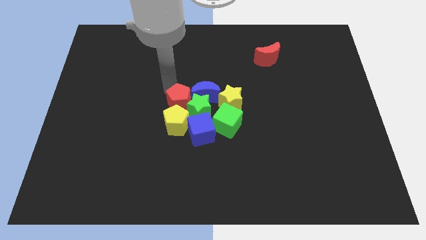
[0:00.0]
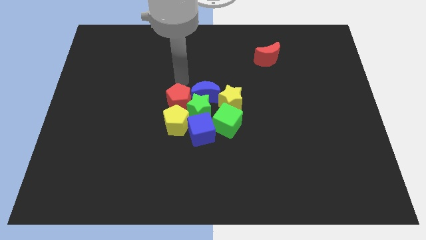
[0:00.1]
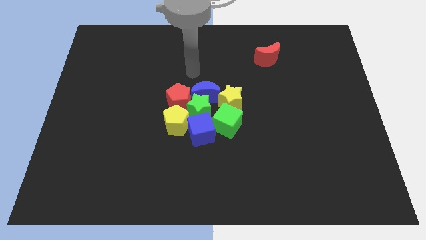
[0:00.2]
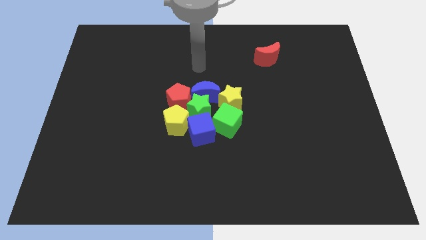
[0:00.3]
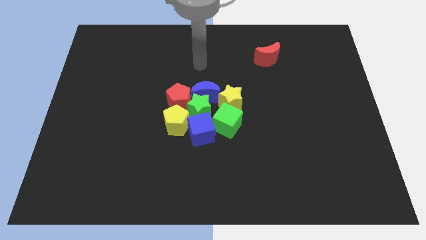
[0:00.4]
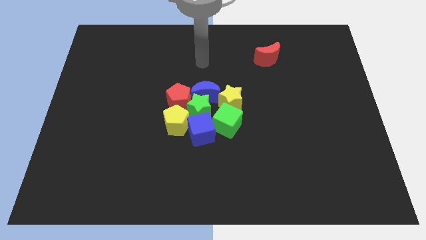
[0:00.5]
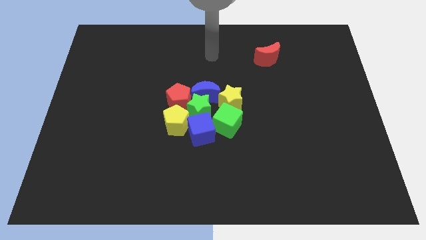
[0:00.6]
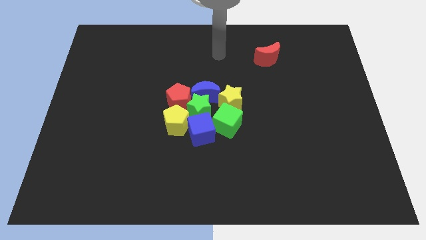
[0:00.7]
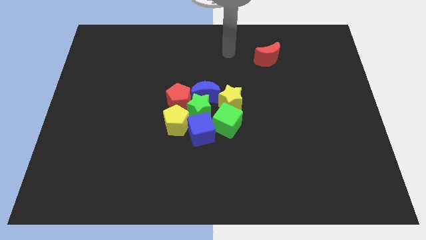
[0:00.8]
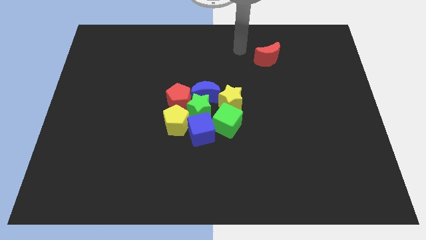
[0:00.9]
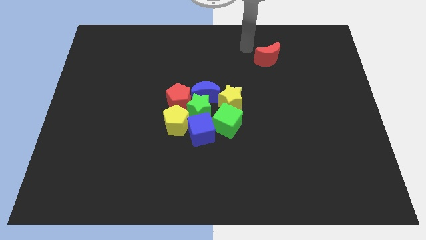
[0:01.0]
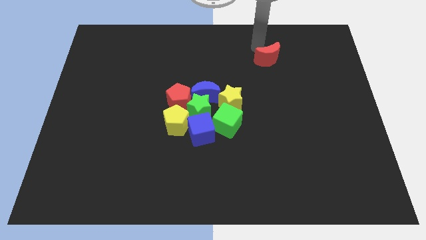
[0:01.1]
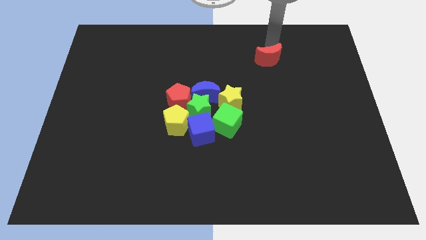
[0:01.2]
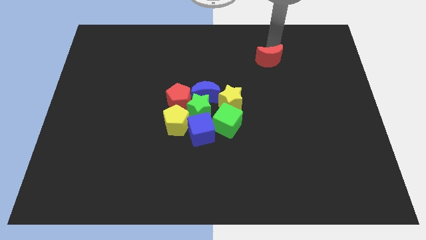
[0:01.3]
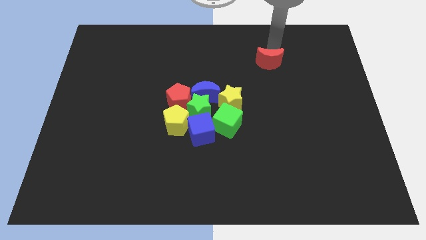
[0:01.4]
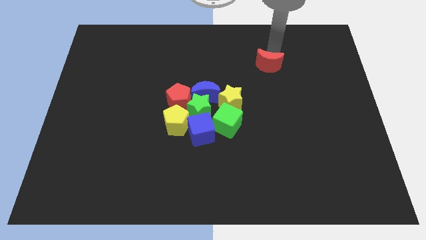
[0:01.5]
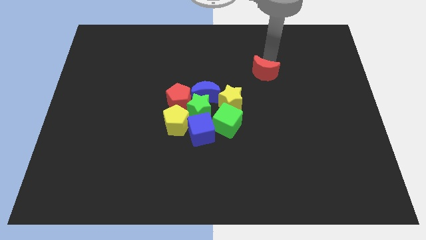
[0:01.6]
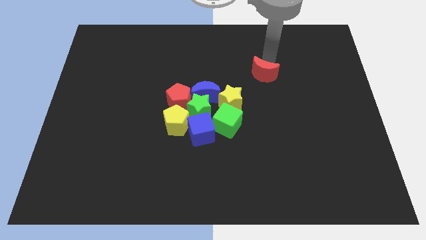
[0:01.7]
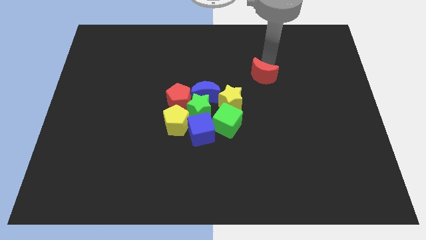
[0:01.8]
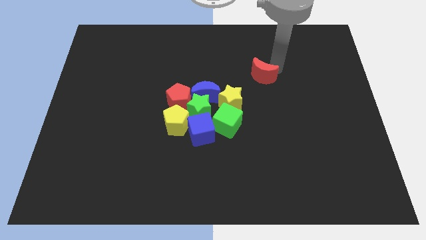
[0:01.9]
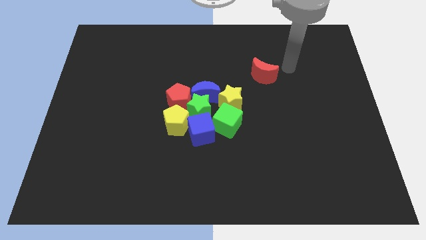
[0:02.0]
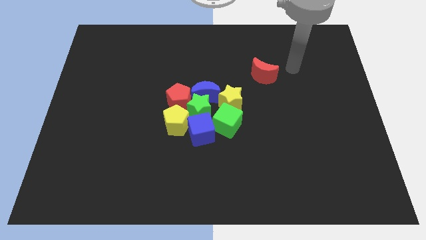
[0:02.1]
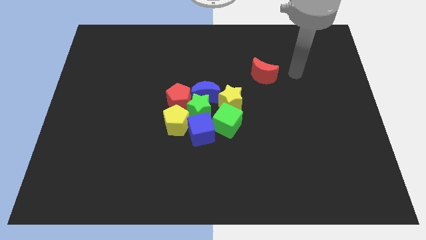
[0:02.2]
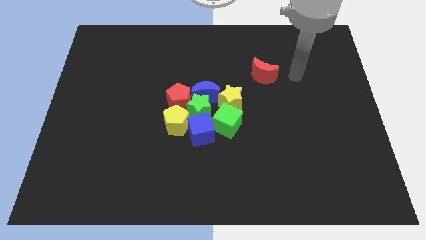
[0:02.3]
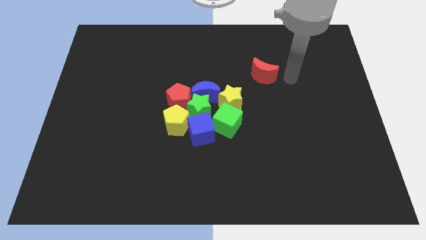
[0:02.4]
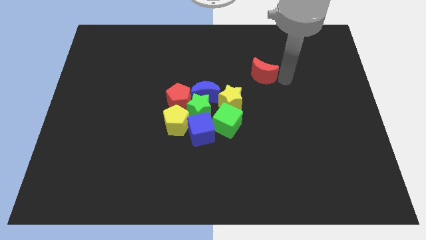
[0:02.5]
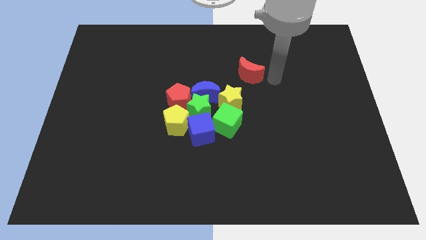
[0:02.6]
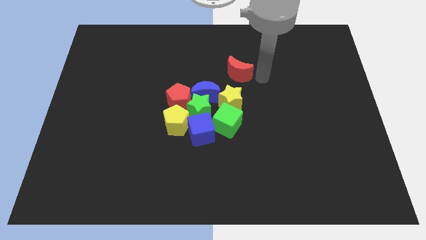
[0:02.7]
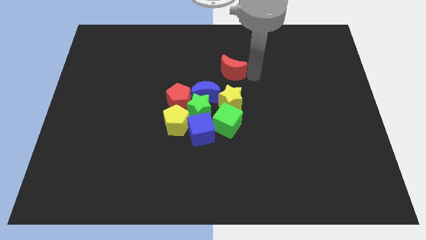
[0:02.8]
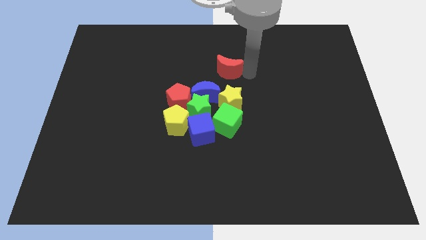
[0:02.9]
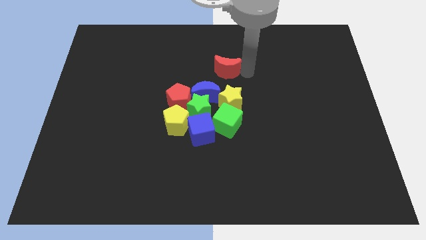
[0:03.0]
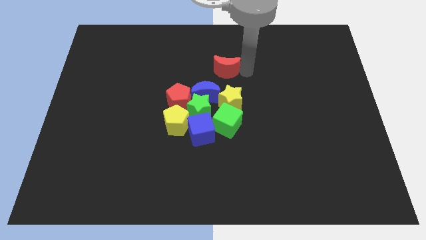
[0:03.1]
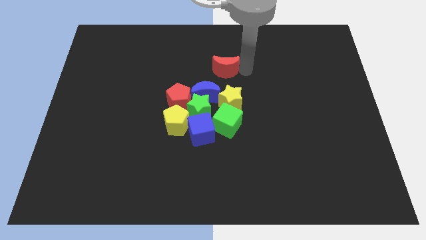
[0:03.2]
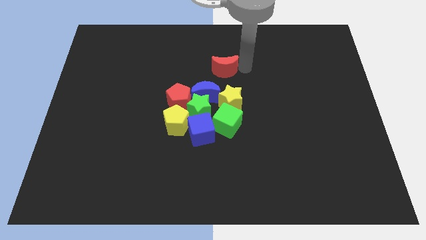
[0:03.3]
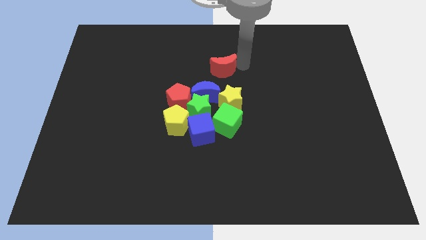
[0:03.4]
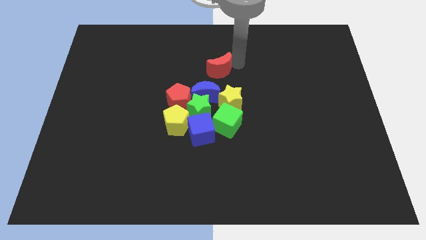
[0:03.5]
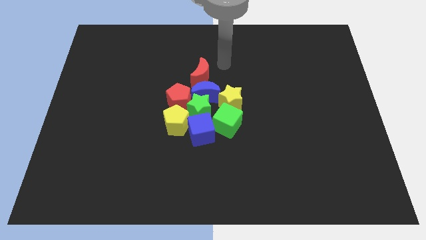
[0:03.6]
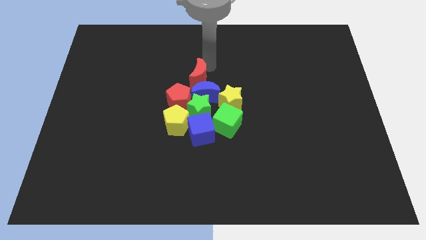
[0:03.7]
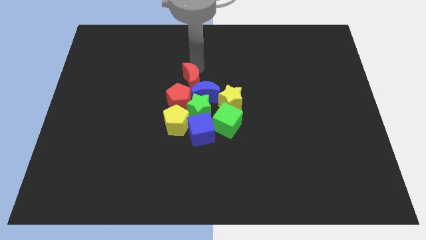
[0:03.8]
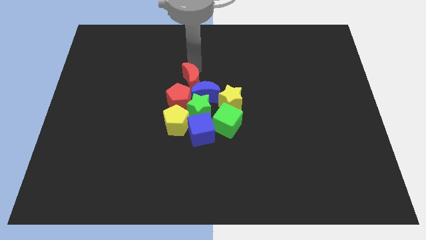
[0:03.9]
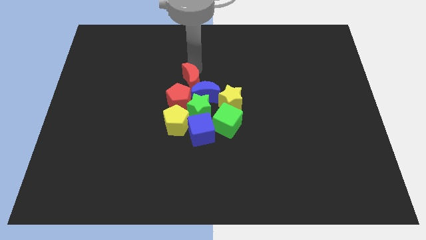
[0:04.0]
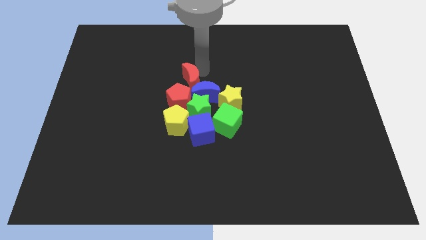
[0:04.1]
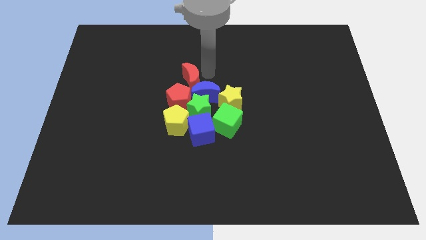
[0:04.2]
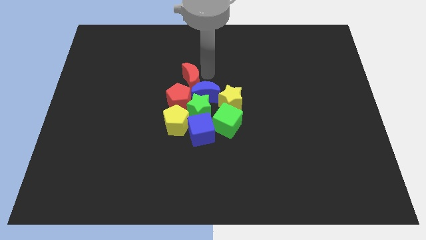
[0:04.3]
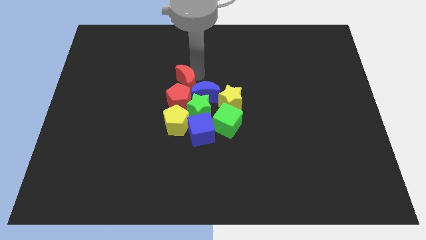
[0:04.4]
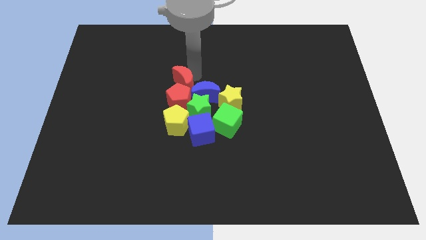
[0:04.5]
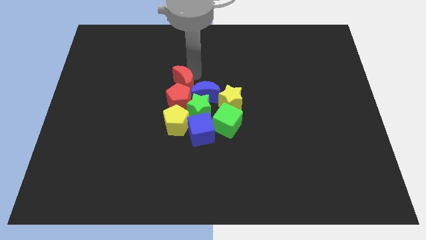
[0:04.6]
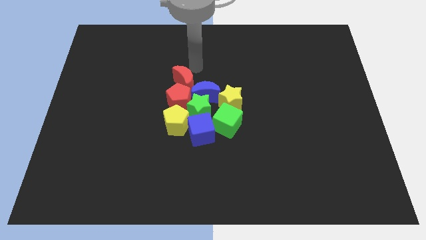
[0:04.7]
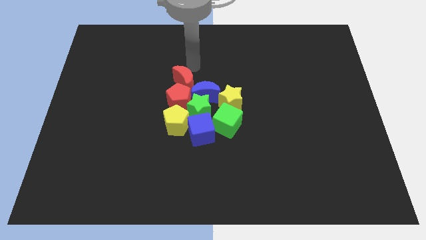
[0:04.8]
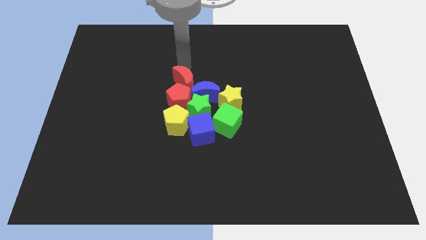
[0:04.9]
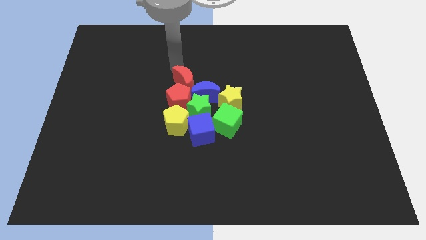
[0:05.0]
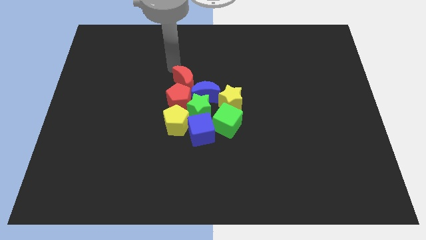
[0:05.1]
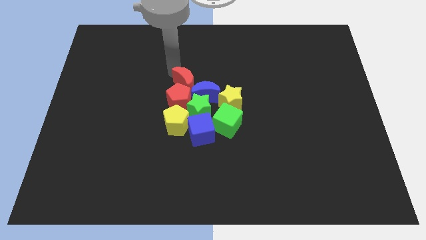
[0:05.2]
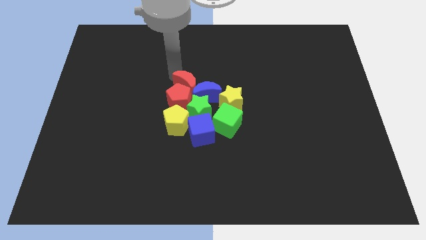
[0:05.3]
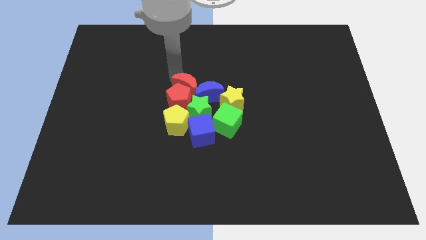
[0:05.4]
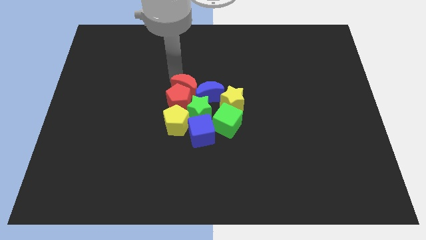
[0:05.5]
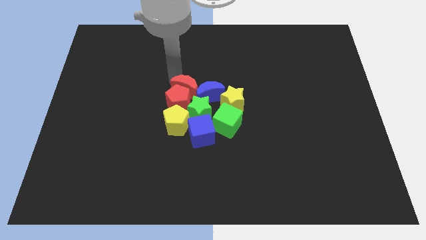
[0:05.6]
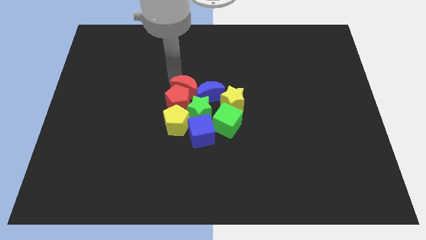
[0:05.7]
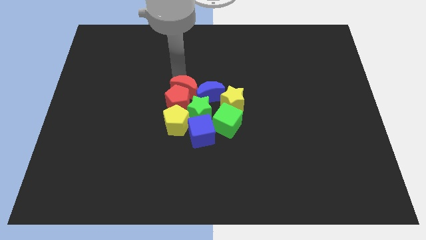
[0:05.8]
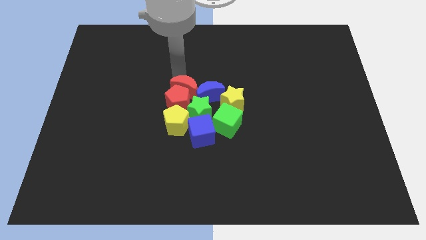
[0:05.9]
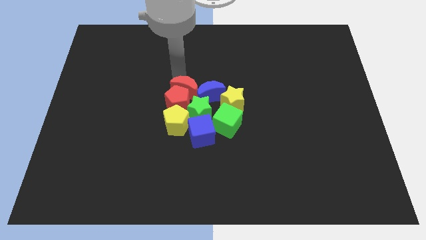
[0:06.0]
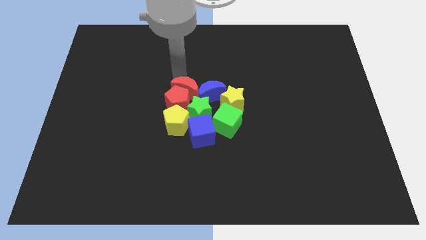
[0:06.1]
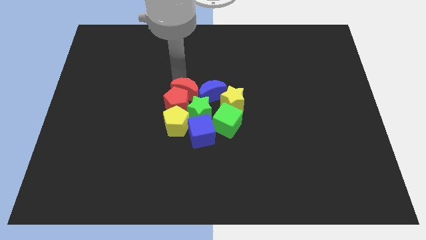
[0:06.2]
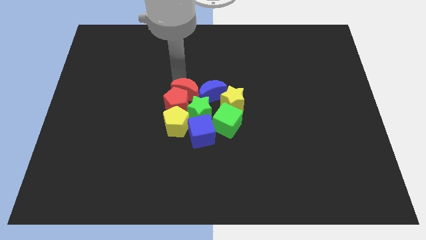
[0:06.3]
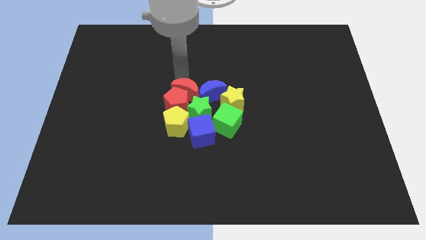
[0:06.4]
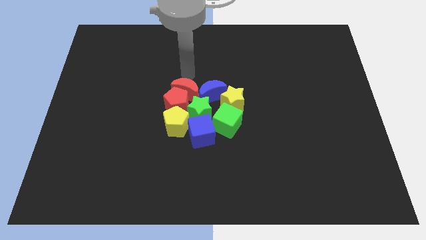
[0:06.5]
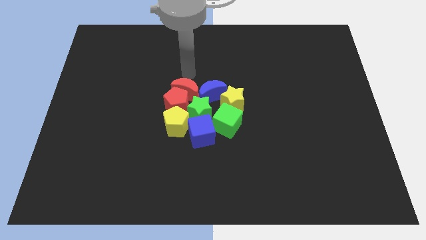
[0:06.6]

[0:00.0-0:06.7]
push the red crescent into the group of blocks

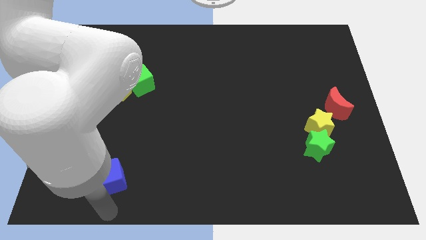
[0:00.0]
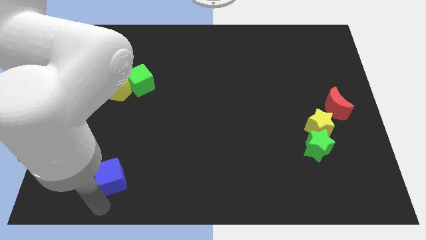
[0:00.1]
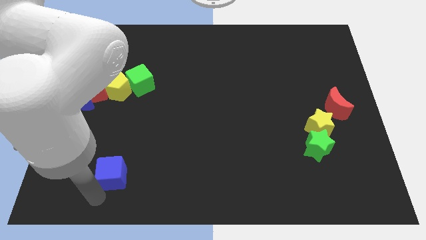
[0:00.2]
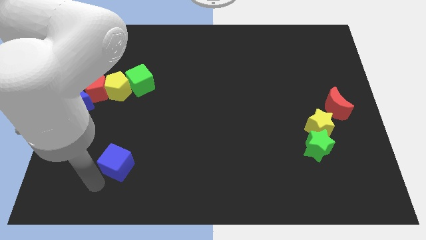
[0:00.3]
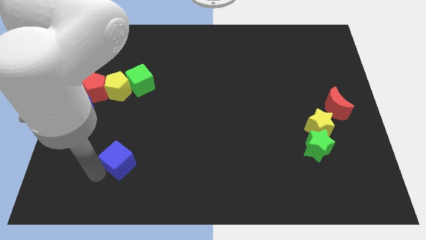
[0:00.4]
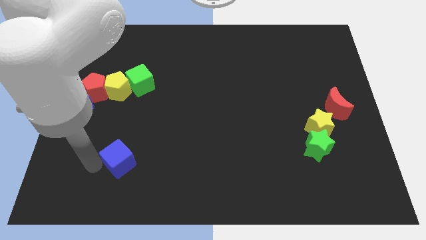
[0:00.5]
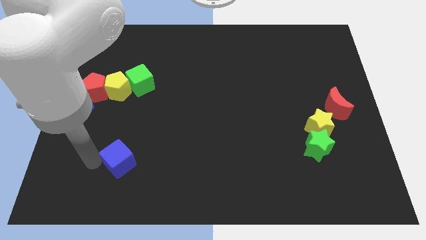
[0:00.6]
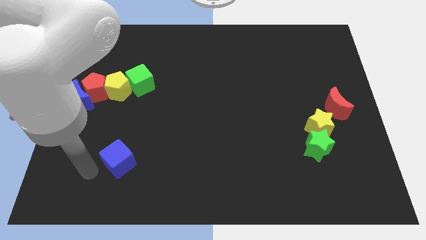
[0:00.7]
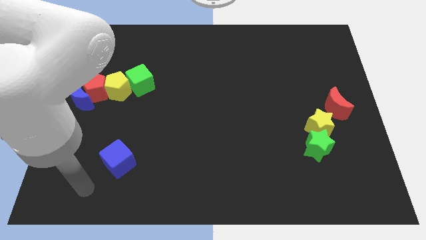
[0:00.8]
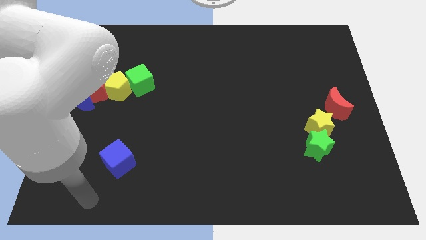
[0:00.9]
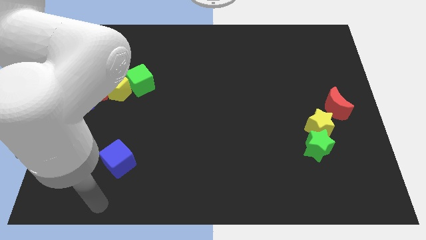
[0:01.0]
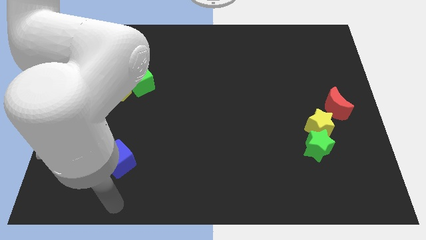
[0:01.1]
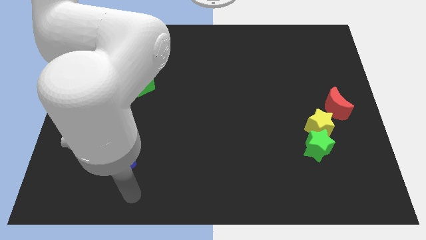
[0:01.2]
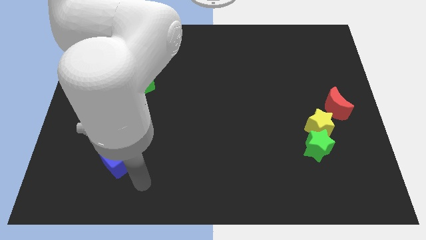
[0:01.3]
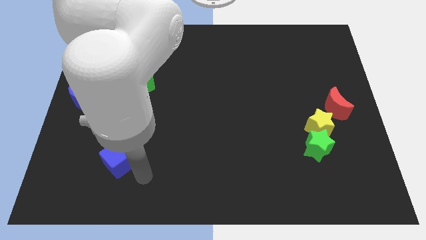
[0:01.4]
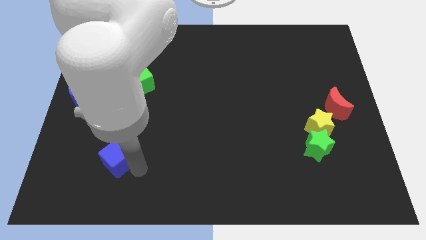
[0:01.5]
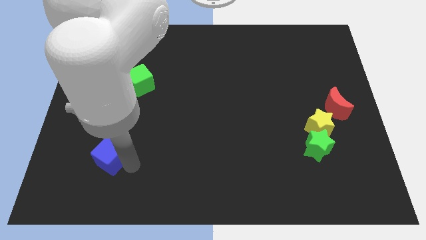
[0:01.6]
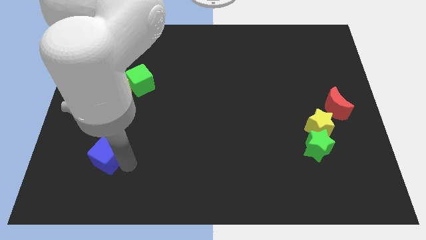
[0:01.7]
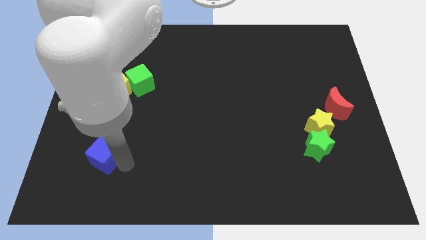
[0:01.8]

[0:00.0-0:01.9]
slightly push the blue cube upwards

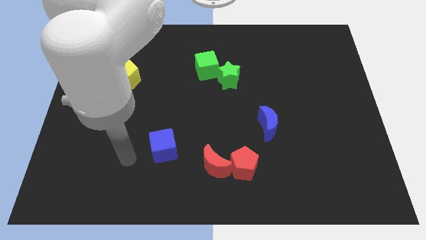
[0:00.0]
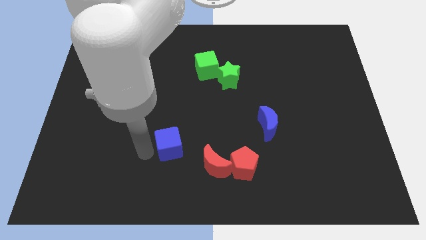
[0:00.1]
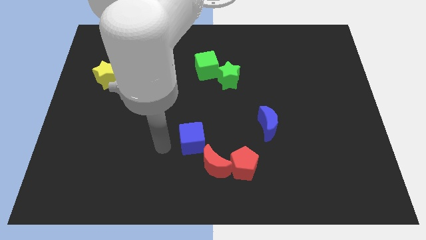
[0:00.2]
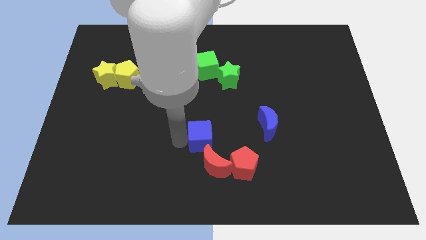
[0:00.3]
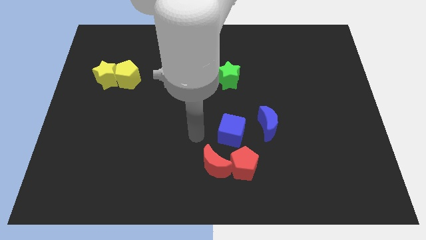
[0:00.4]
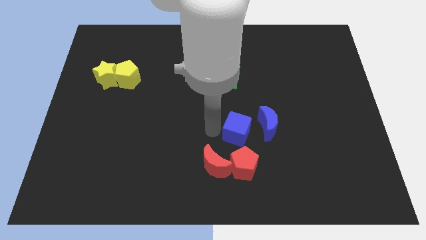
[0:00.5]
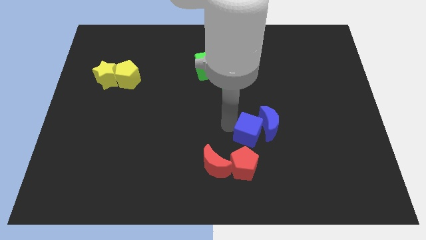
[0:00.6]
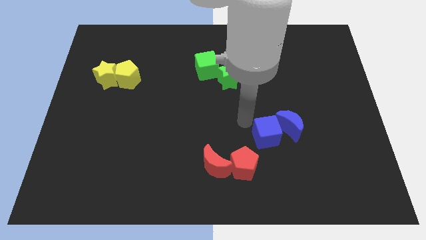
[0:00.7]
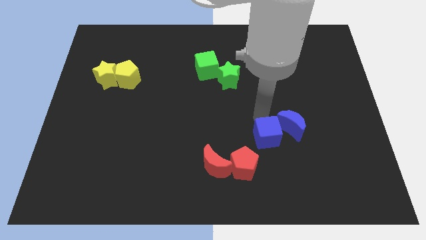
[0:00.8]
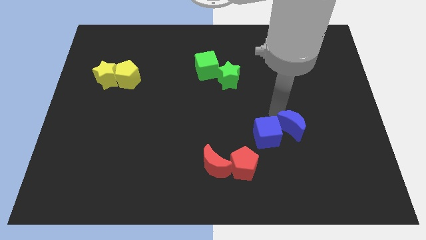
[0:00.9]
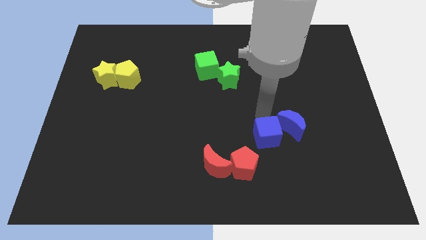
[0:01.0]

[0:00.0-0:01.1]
push blue cube close to the blue crescent
